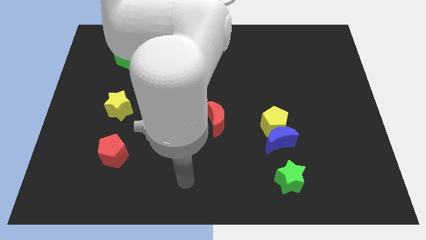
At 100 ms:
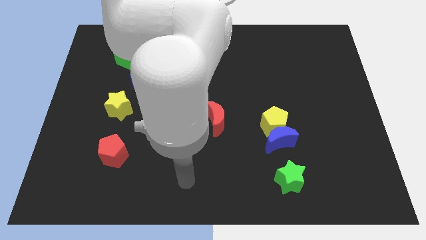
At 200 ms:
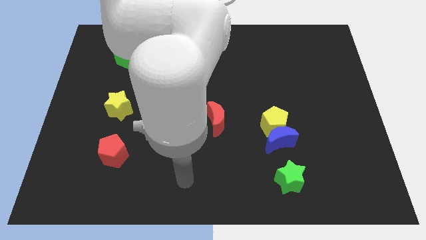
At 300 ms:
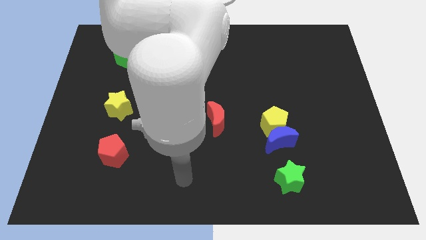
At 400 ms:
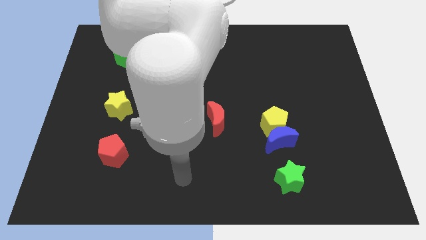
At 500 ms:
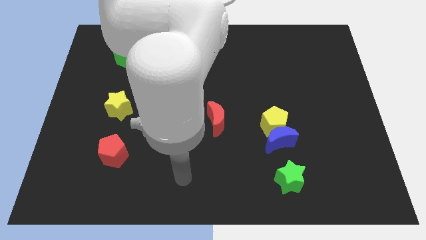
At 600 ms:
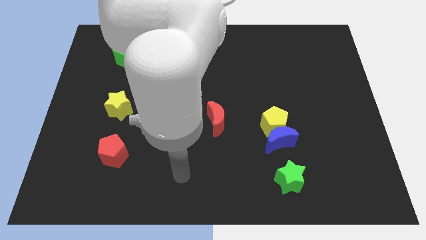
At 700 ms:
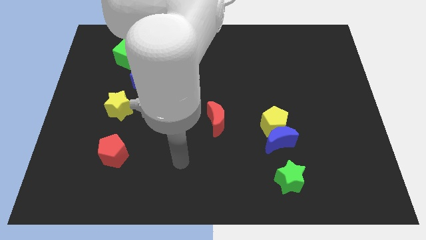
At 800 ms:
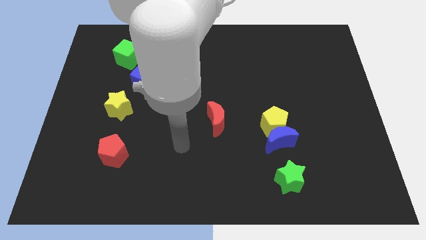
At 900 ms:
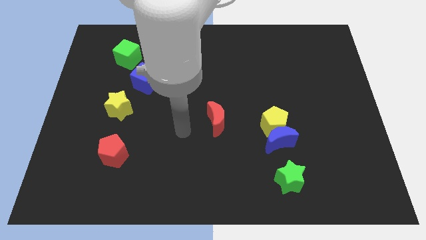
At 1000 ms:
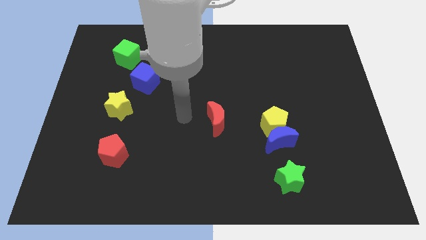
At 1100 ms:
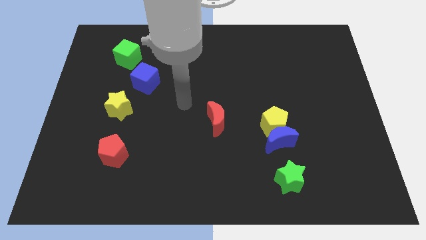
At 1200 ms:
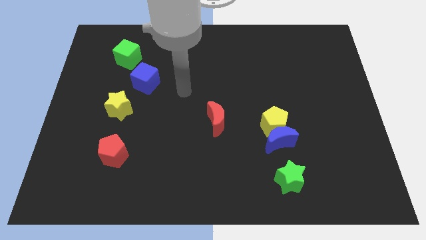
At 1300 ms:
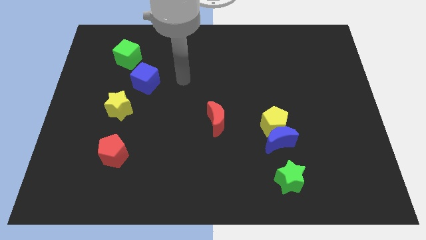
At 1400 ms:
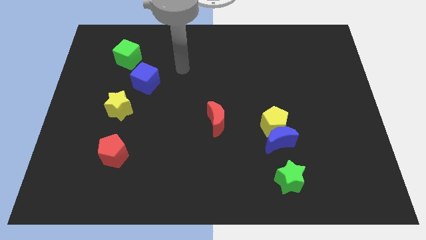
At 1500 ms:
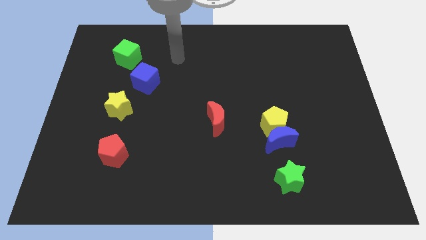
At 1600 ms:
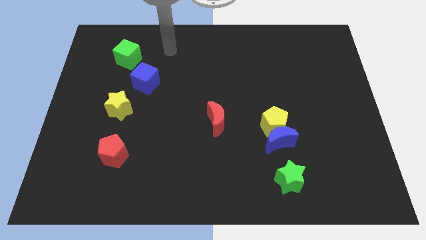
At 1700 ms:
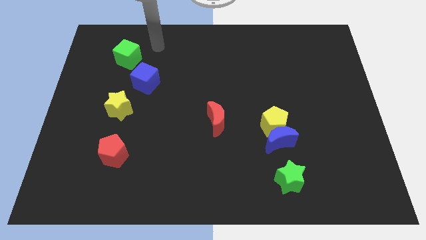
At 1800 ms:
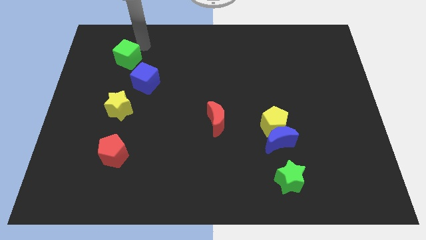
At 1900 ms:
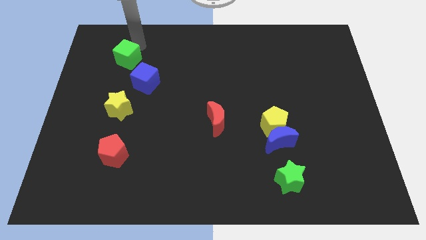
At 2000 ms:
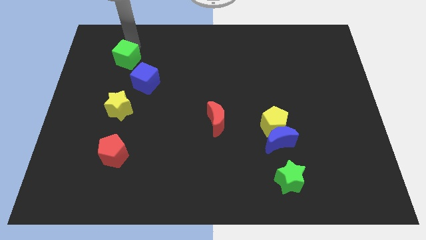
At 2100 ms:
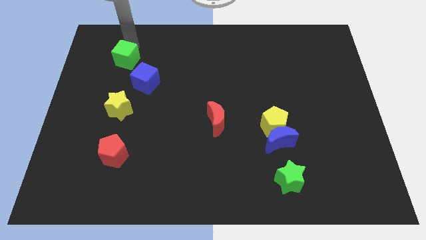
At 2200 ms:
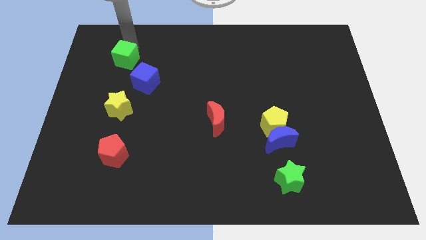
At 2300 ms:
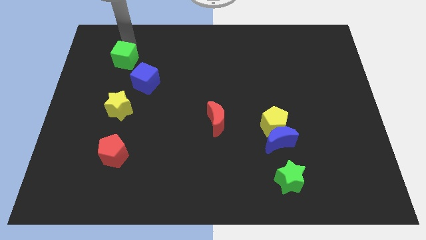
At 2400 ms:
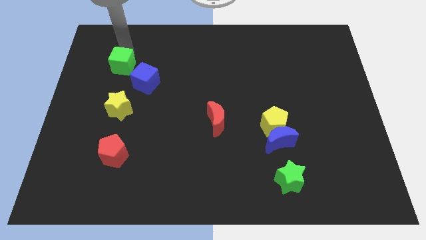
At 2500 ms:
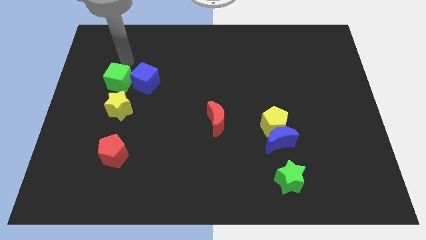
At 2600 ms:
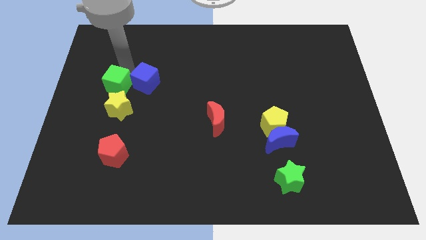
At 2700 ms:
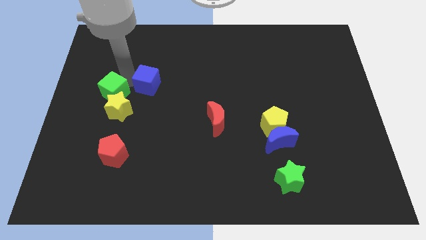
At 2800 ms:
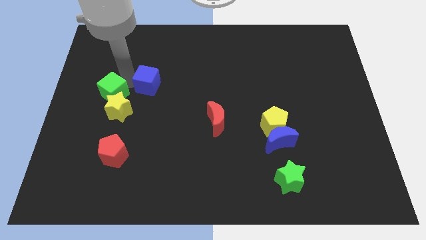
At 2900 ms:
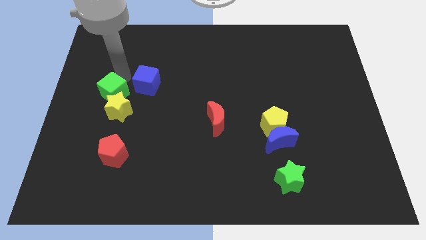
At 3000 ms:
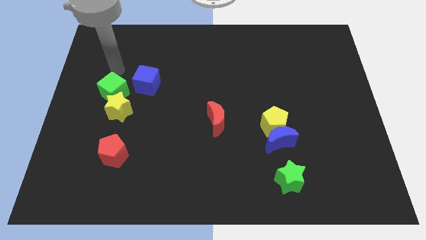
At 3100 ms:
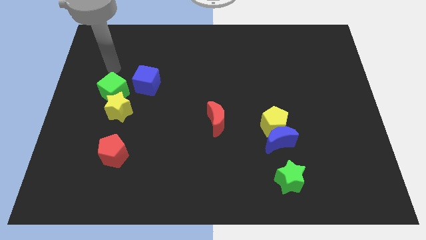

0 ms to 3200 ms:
push the green cube to the top left side of the yellow star

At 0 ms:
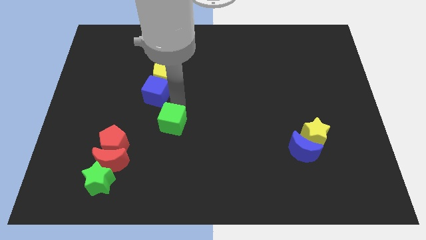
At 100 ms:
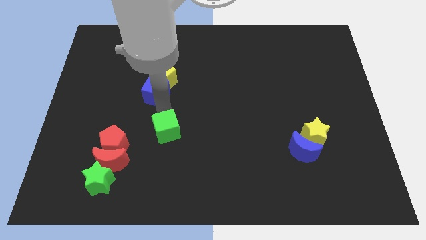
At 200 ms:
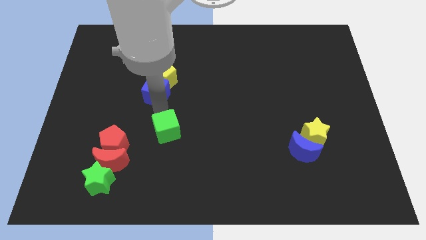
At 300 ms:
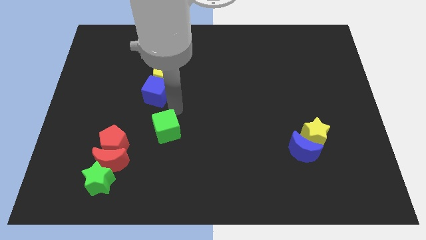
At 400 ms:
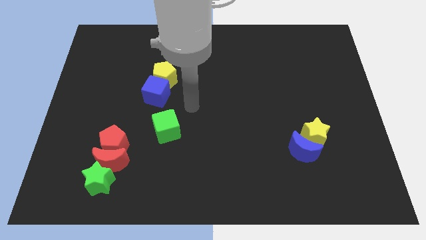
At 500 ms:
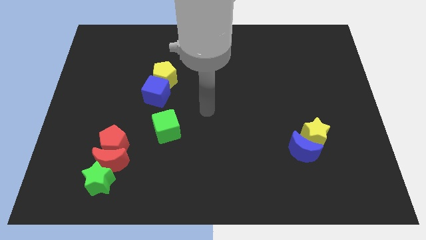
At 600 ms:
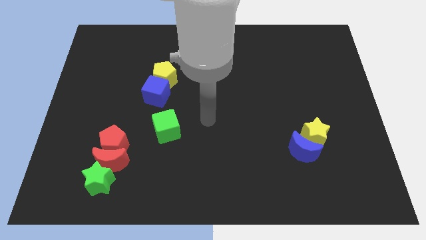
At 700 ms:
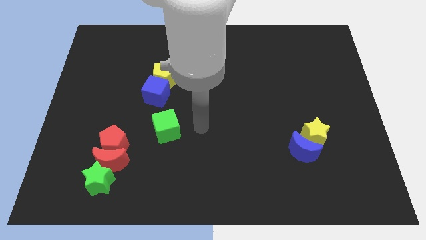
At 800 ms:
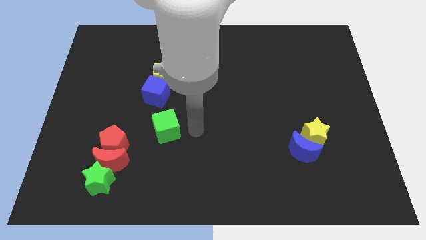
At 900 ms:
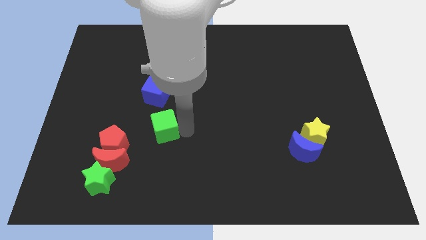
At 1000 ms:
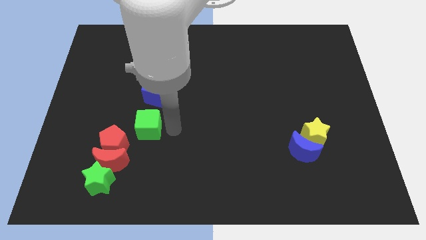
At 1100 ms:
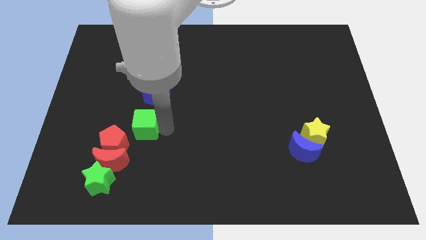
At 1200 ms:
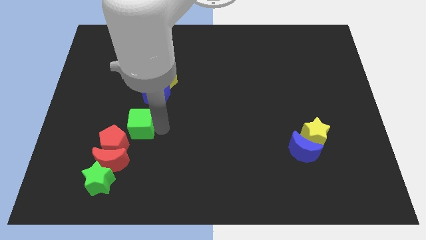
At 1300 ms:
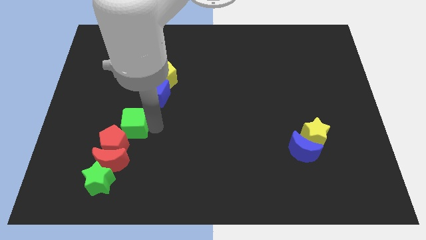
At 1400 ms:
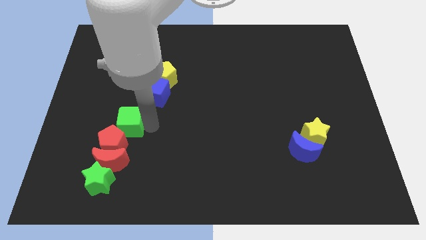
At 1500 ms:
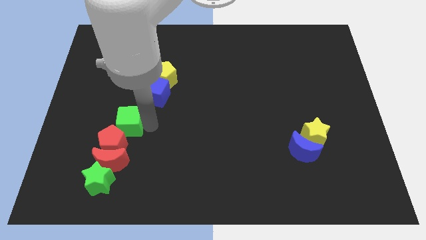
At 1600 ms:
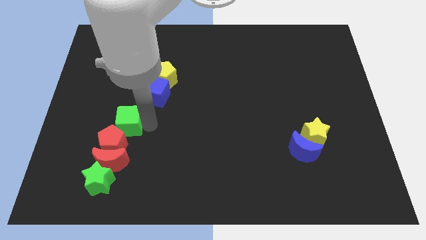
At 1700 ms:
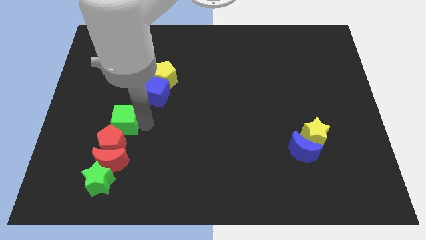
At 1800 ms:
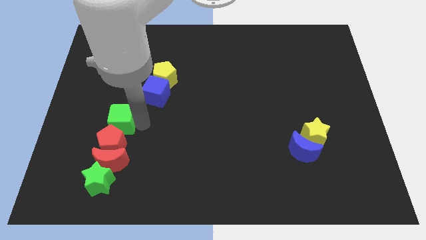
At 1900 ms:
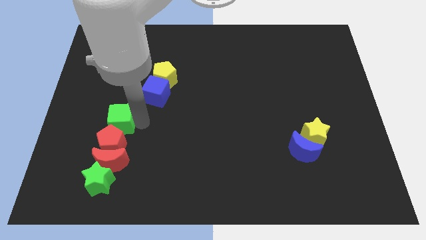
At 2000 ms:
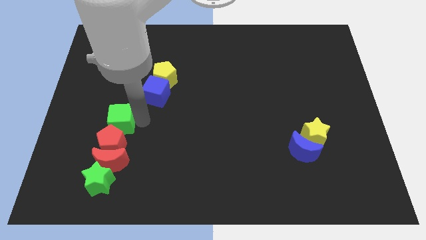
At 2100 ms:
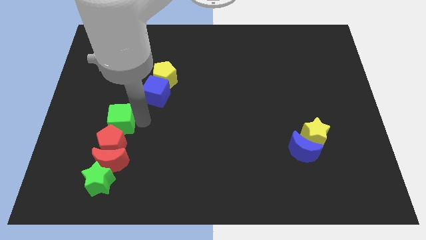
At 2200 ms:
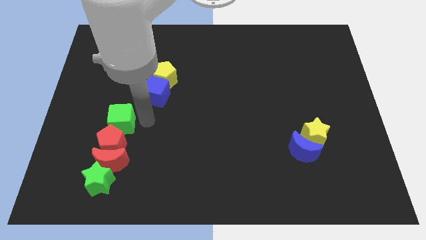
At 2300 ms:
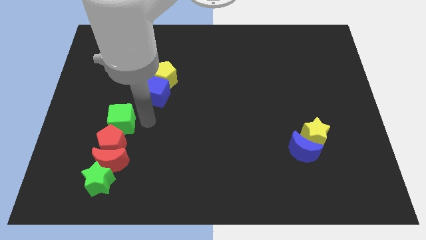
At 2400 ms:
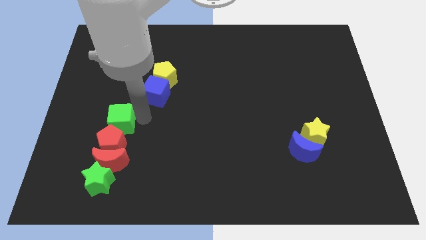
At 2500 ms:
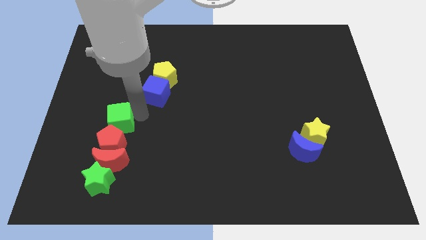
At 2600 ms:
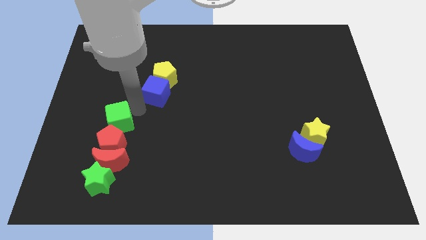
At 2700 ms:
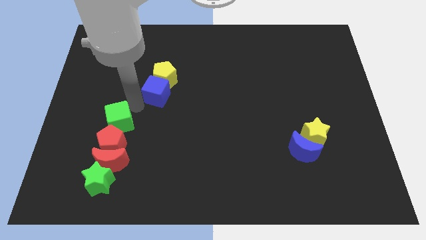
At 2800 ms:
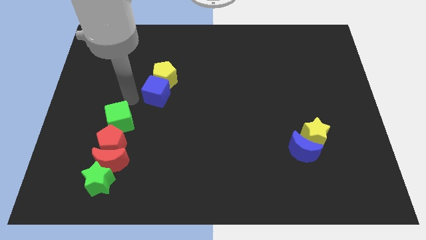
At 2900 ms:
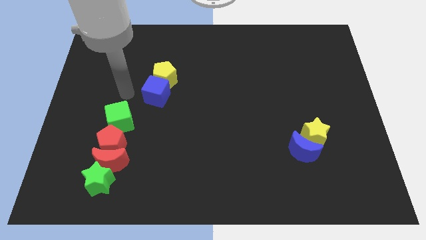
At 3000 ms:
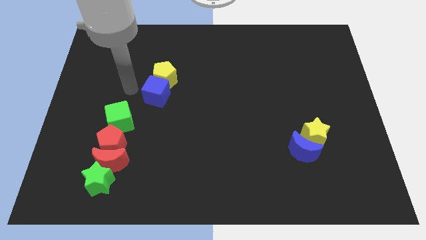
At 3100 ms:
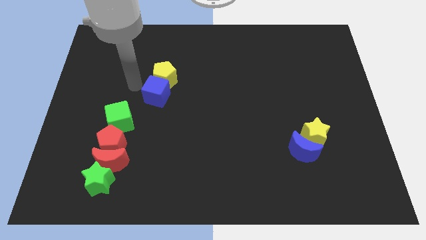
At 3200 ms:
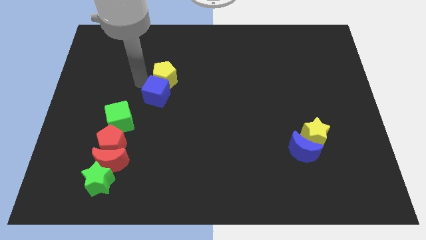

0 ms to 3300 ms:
push the green cube above the red pentagon

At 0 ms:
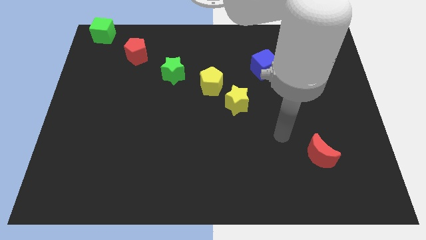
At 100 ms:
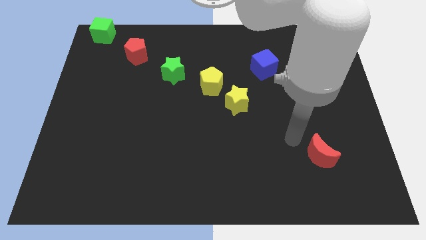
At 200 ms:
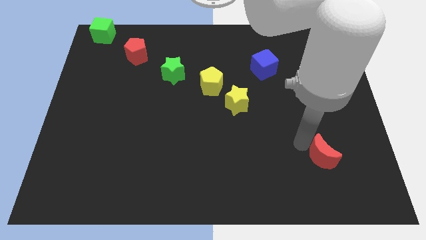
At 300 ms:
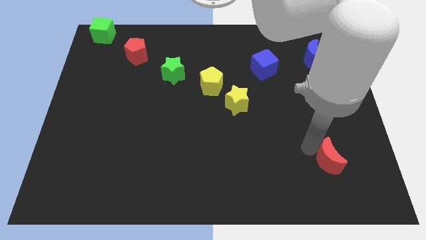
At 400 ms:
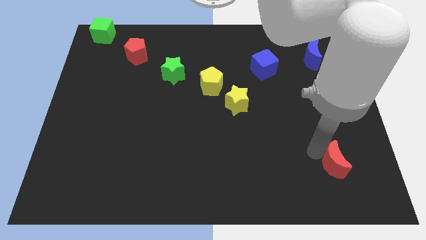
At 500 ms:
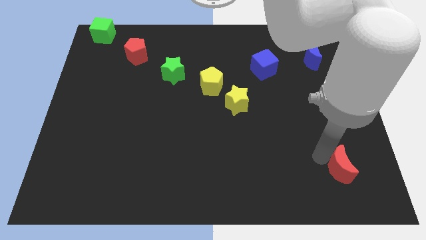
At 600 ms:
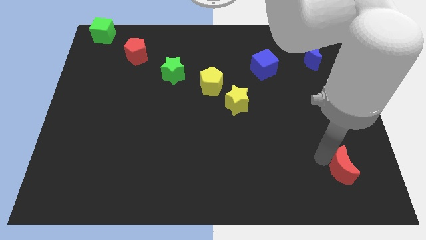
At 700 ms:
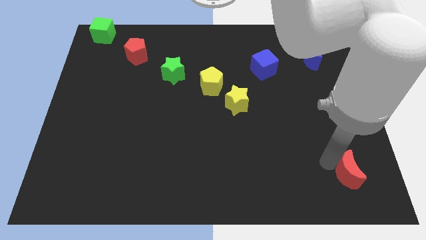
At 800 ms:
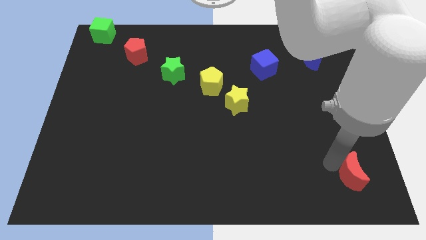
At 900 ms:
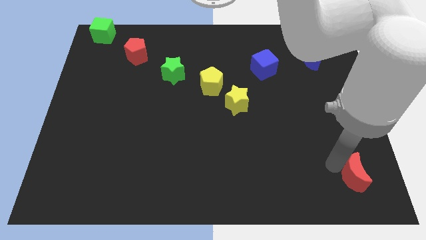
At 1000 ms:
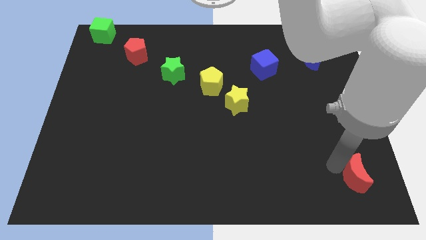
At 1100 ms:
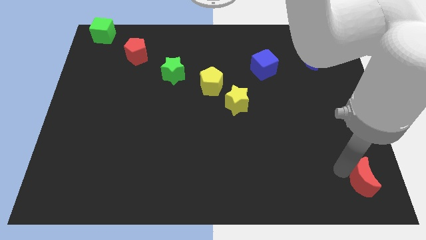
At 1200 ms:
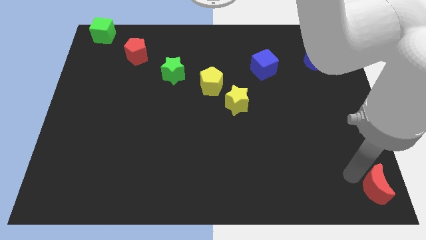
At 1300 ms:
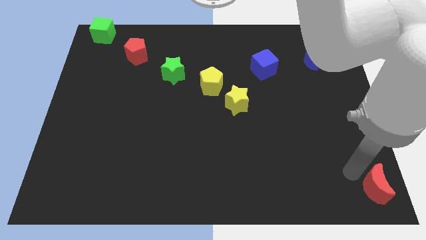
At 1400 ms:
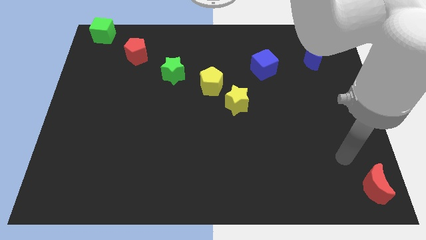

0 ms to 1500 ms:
push the red moon to the bottom right side of the board

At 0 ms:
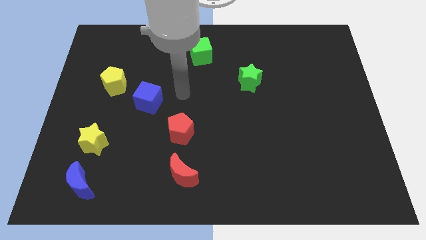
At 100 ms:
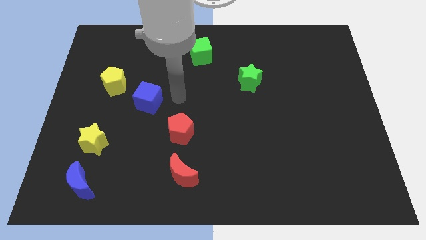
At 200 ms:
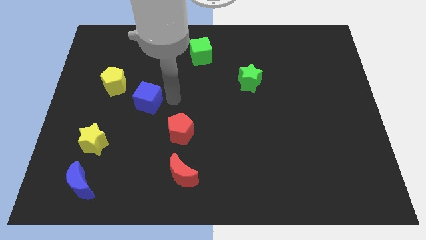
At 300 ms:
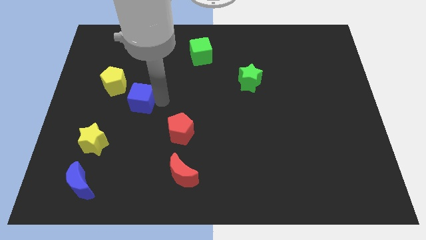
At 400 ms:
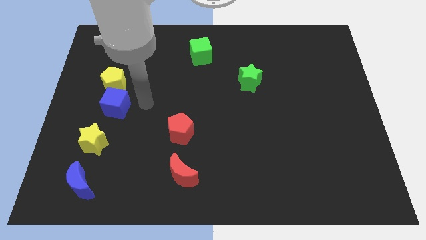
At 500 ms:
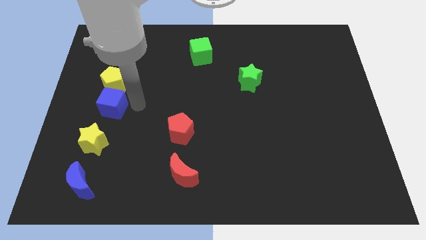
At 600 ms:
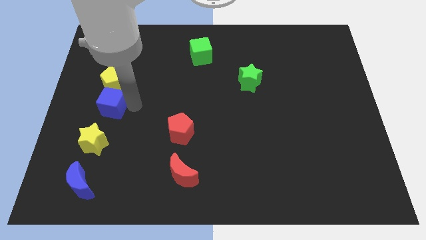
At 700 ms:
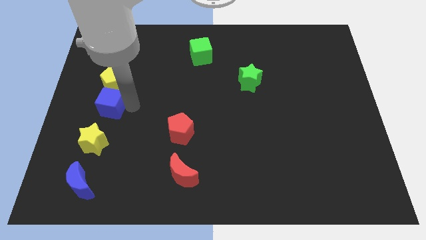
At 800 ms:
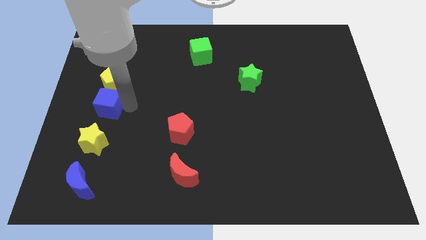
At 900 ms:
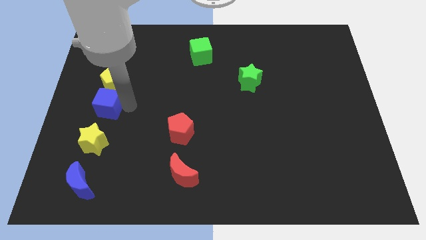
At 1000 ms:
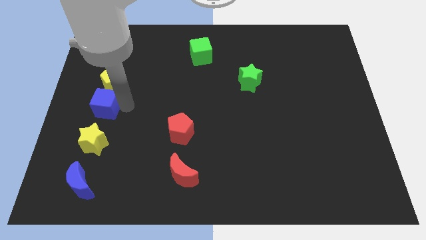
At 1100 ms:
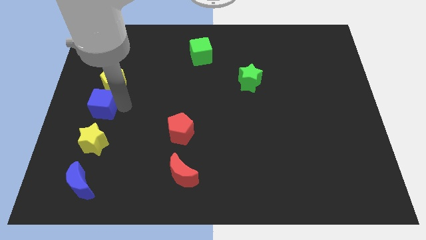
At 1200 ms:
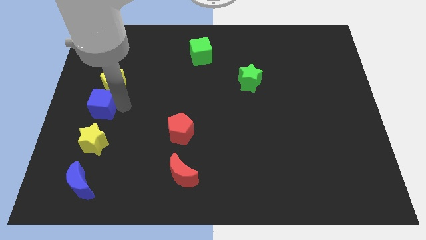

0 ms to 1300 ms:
place the blue cube between the yellow star and yellow pentagon
